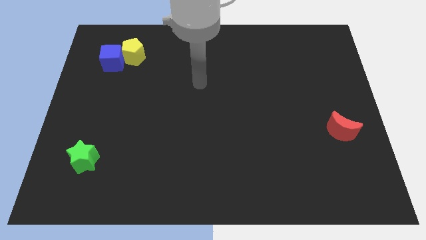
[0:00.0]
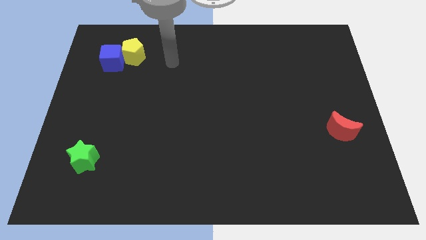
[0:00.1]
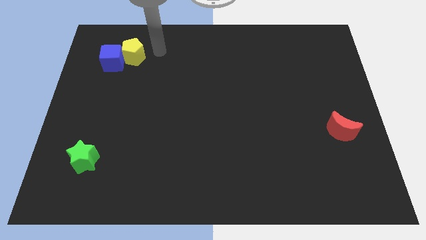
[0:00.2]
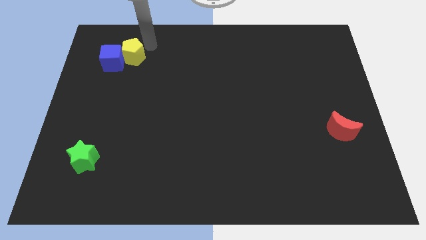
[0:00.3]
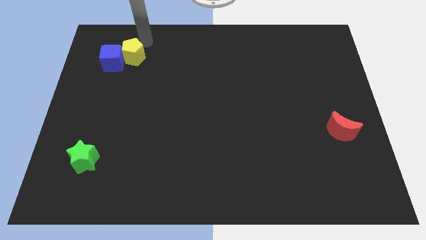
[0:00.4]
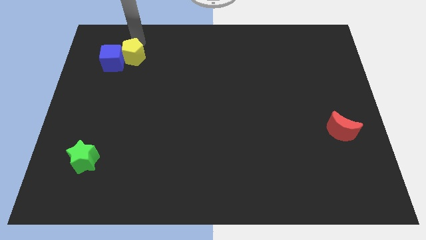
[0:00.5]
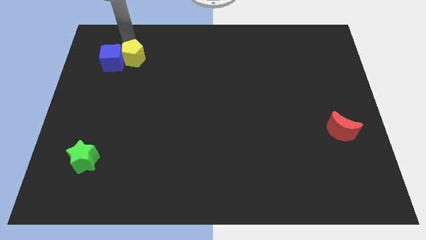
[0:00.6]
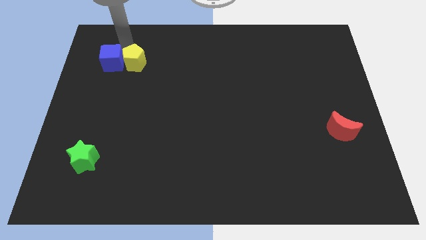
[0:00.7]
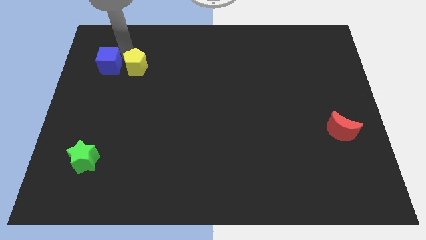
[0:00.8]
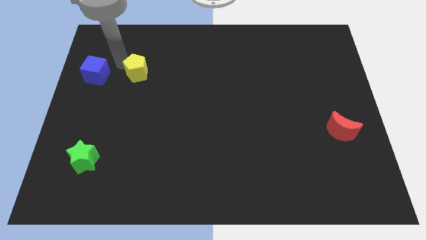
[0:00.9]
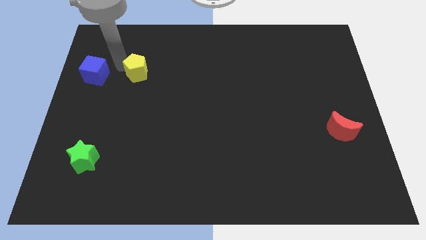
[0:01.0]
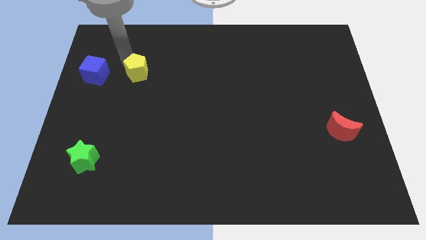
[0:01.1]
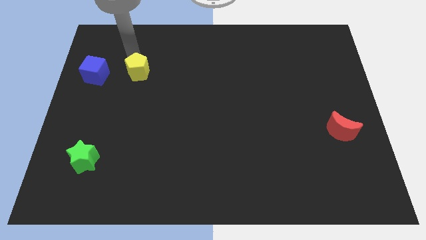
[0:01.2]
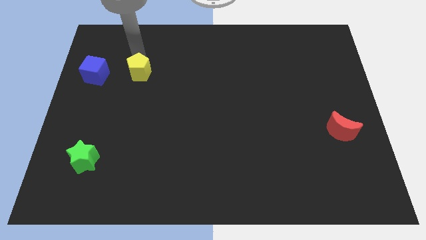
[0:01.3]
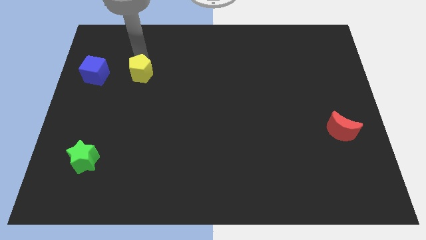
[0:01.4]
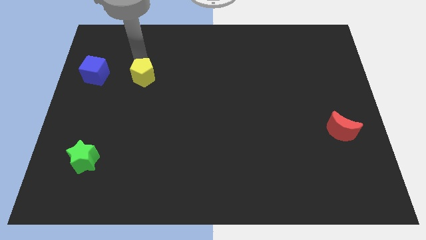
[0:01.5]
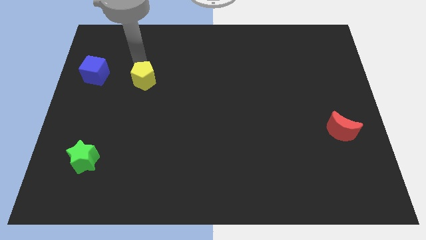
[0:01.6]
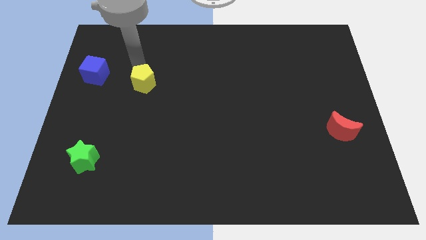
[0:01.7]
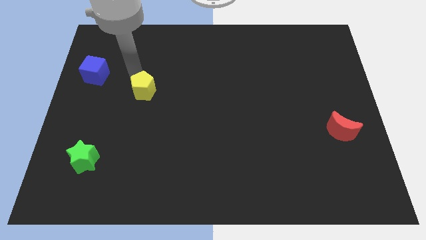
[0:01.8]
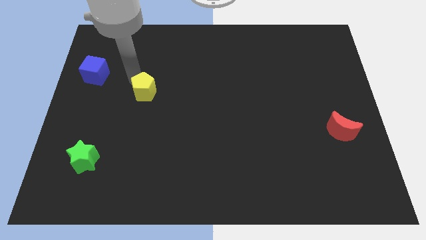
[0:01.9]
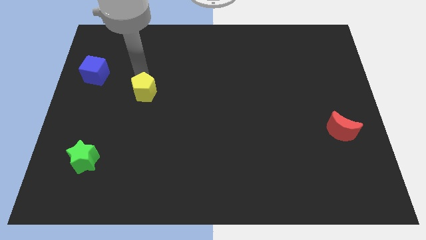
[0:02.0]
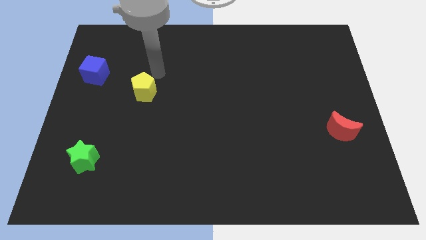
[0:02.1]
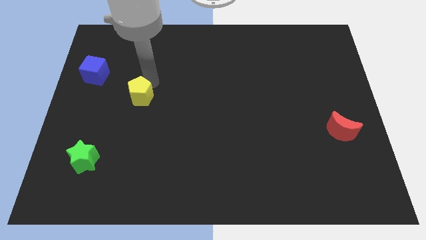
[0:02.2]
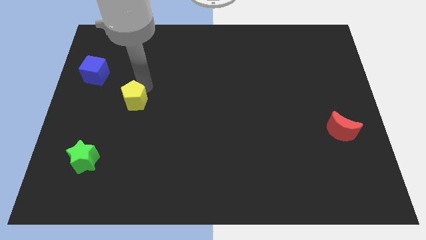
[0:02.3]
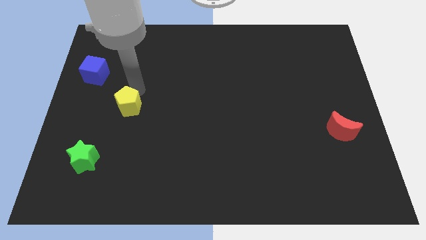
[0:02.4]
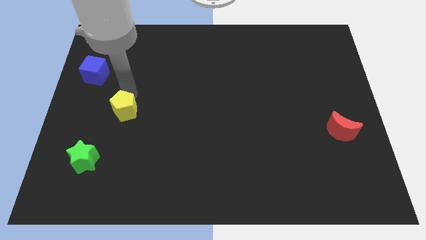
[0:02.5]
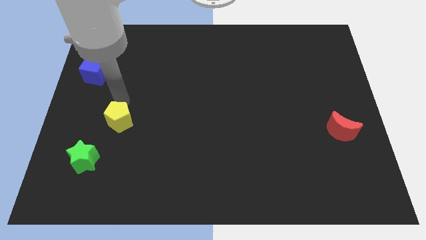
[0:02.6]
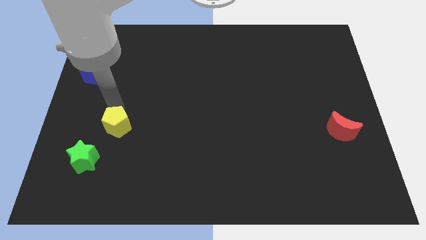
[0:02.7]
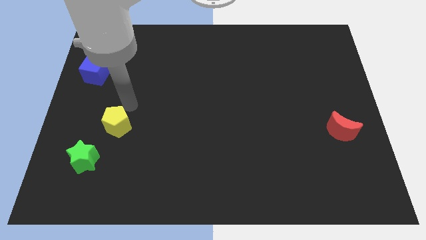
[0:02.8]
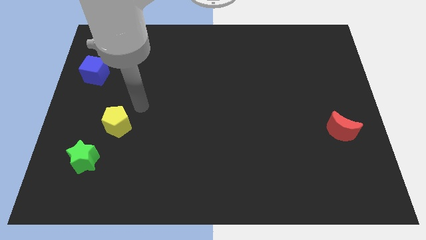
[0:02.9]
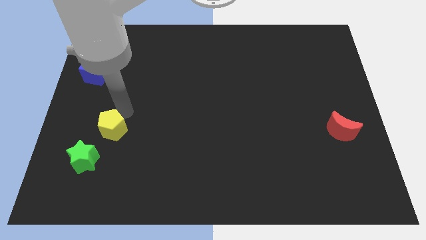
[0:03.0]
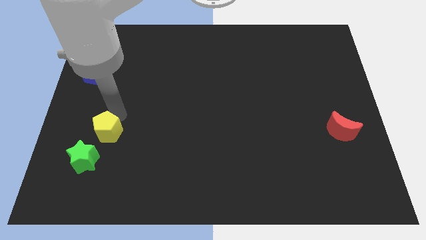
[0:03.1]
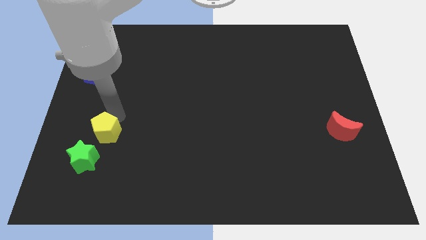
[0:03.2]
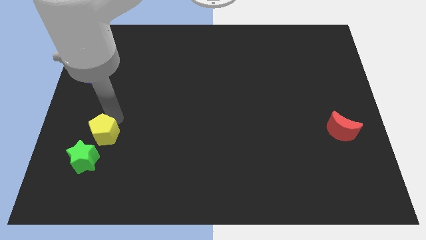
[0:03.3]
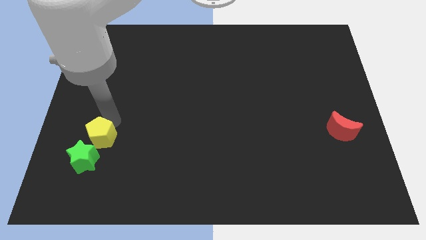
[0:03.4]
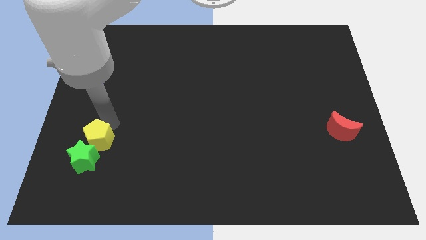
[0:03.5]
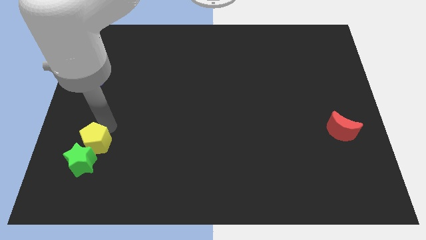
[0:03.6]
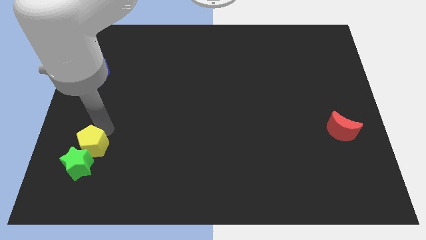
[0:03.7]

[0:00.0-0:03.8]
push the yellow block towards the green block

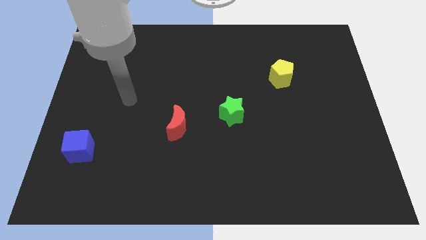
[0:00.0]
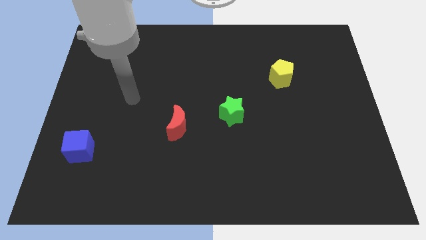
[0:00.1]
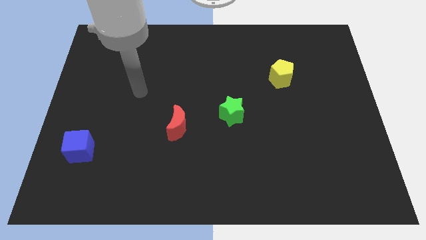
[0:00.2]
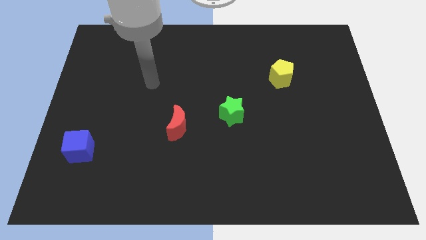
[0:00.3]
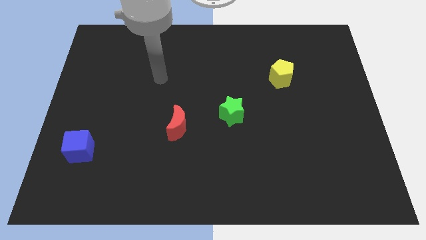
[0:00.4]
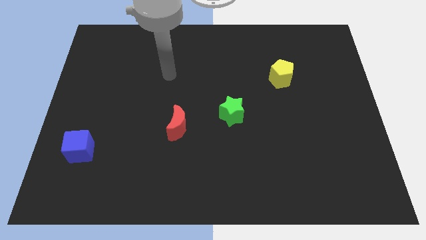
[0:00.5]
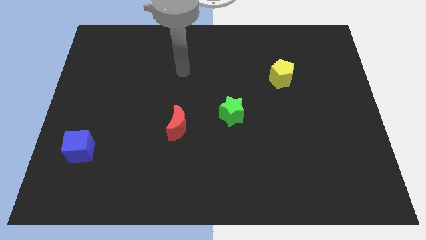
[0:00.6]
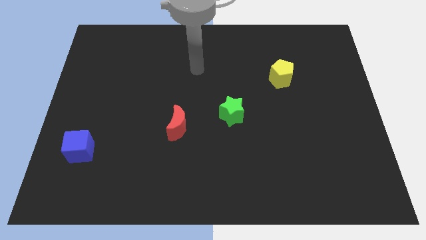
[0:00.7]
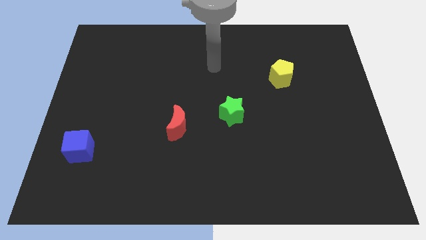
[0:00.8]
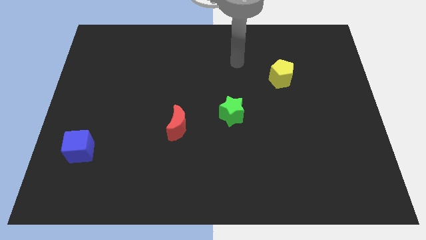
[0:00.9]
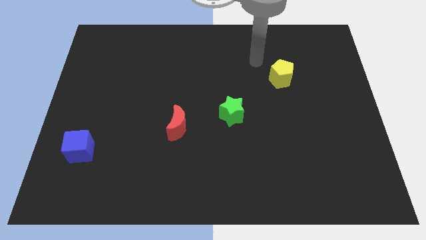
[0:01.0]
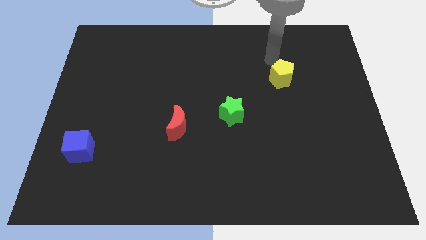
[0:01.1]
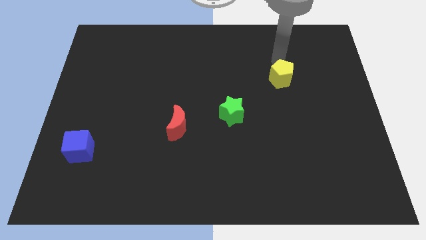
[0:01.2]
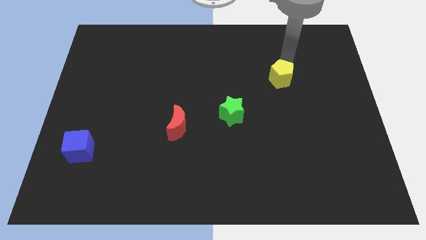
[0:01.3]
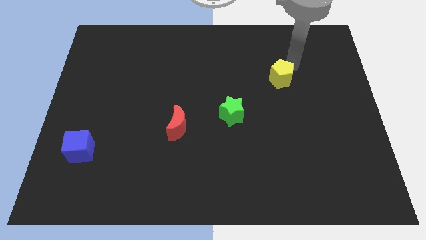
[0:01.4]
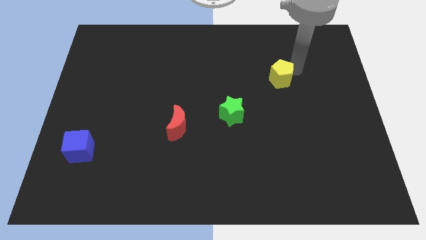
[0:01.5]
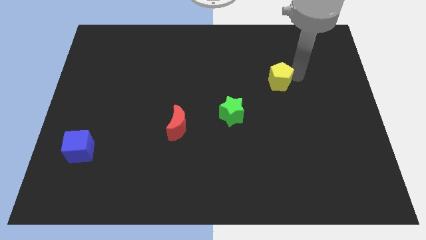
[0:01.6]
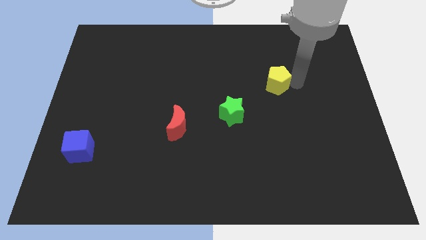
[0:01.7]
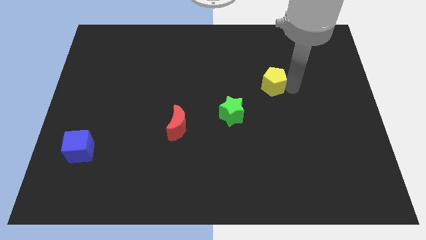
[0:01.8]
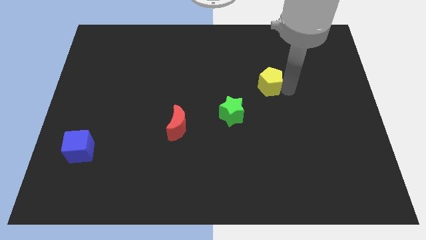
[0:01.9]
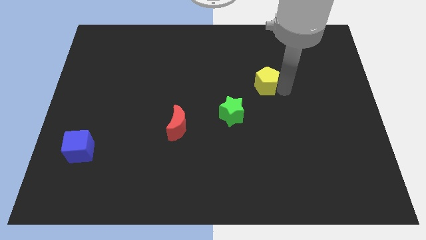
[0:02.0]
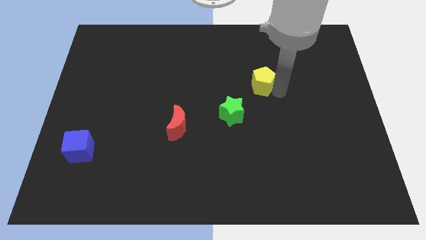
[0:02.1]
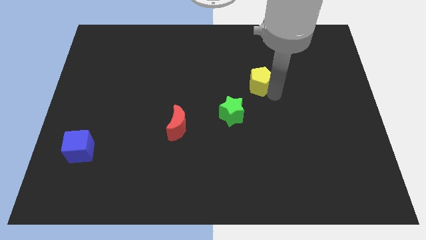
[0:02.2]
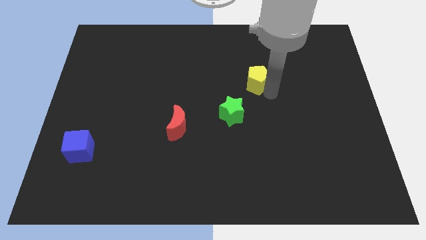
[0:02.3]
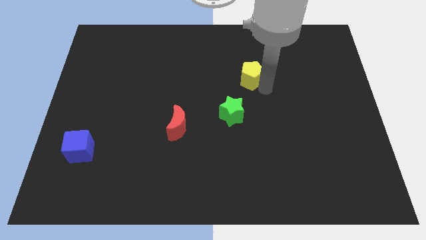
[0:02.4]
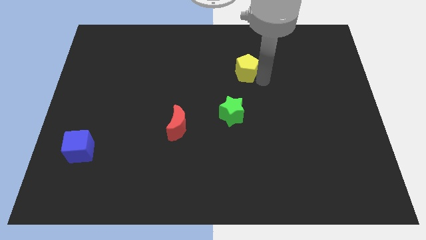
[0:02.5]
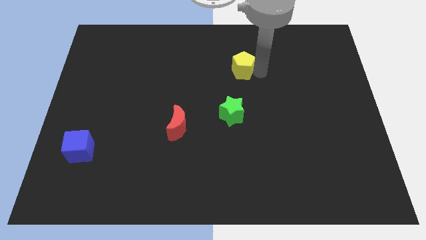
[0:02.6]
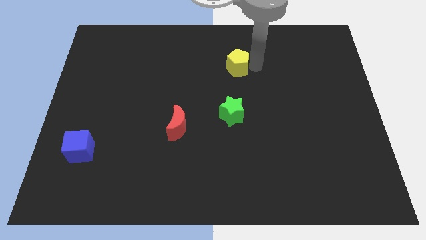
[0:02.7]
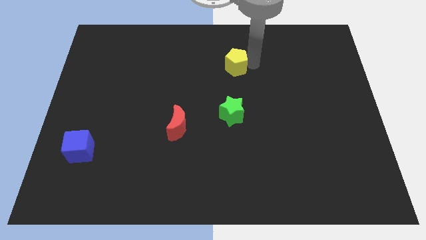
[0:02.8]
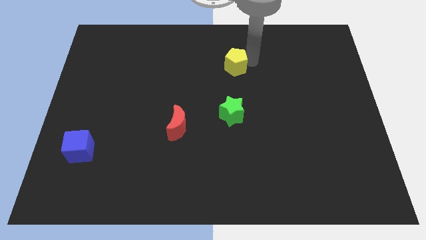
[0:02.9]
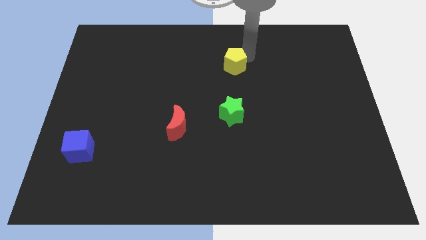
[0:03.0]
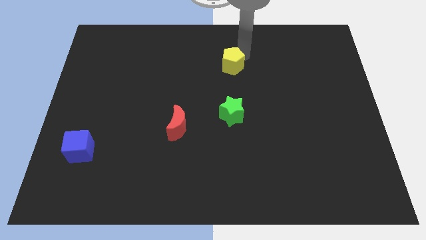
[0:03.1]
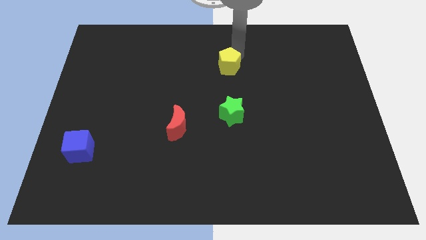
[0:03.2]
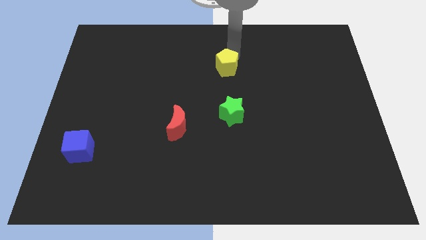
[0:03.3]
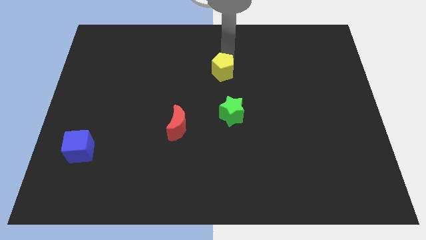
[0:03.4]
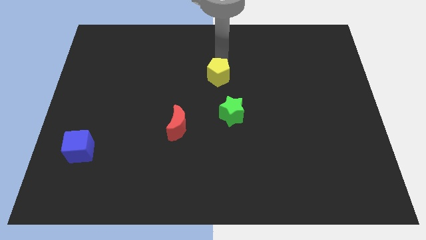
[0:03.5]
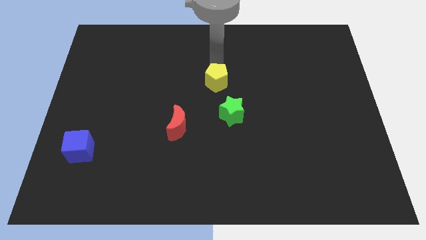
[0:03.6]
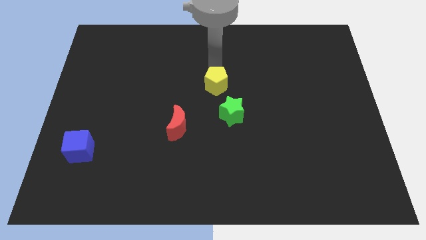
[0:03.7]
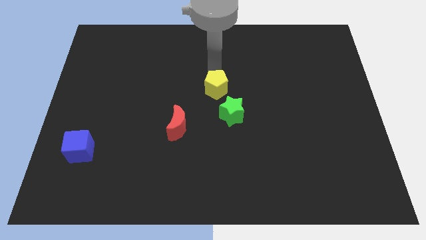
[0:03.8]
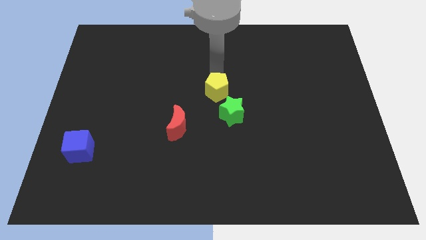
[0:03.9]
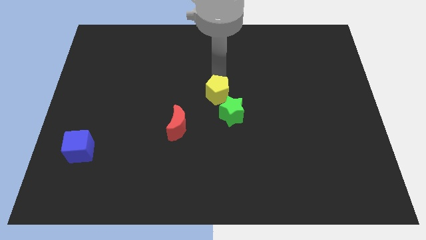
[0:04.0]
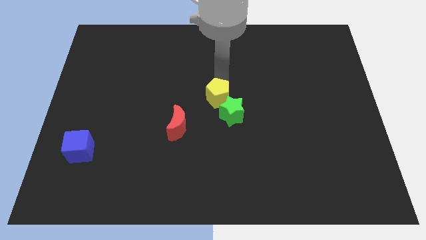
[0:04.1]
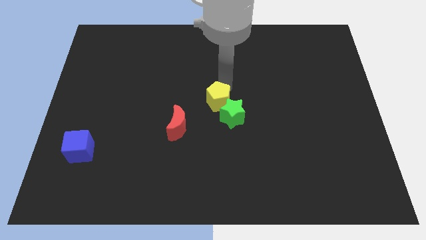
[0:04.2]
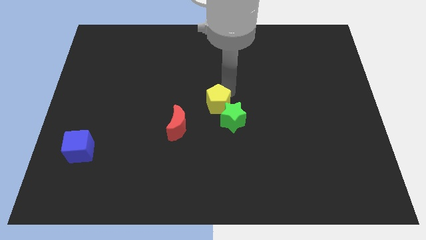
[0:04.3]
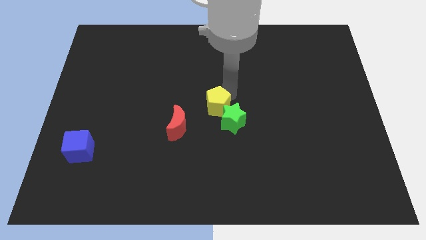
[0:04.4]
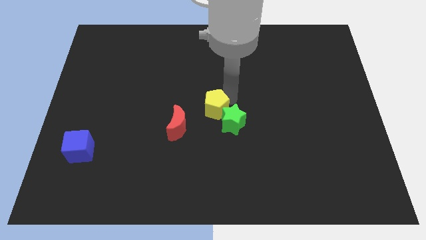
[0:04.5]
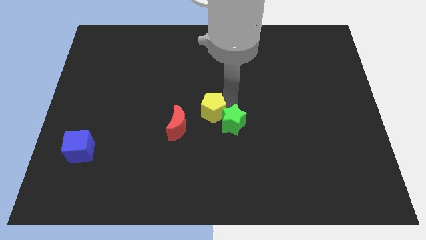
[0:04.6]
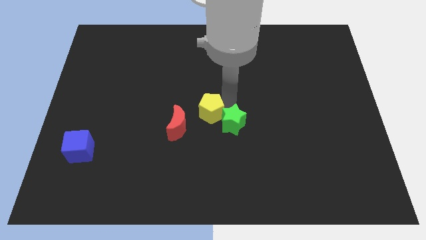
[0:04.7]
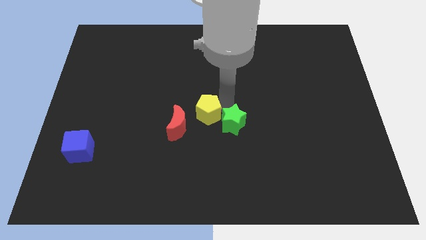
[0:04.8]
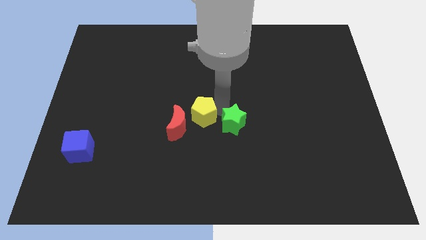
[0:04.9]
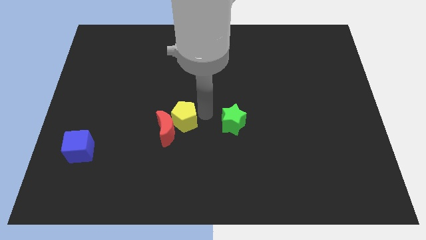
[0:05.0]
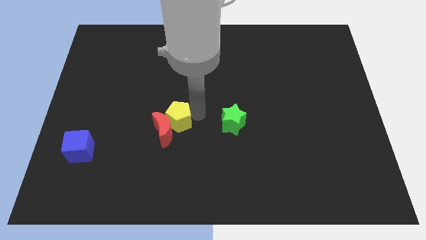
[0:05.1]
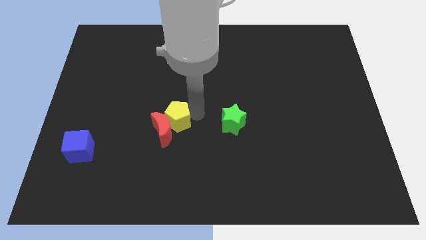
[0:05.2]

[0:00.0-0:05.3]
push the yellow pentagon close to the moon
